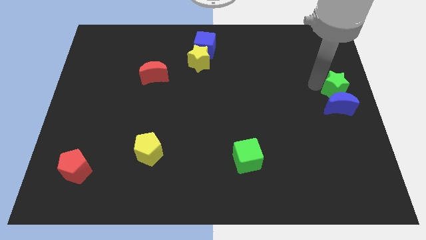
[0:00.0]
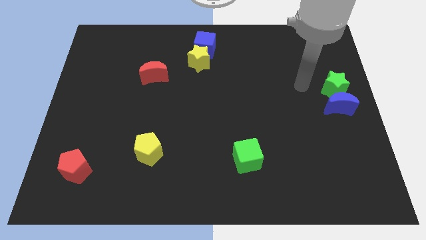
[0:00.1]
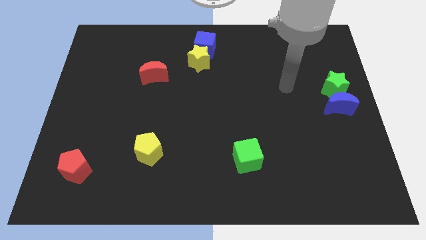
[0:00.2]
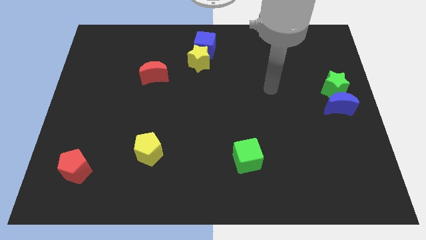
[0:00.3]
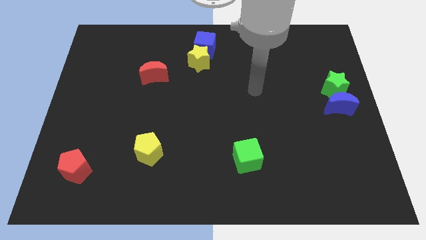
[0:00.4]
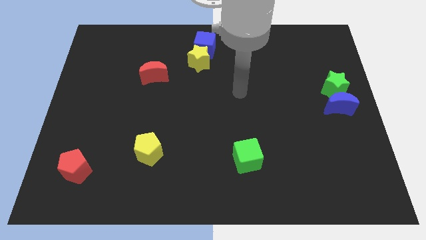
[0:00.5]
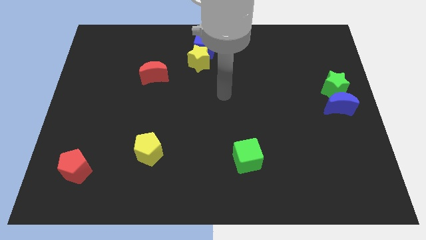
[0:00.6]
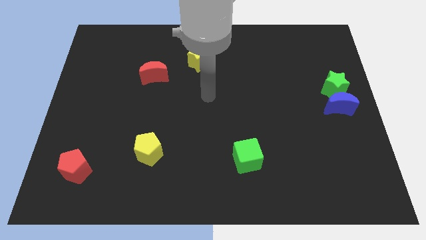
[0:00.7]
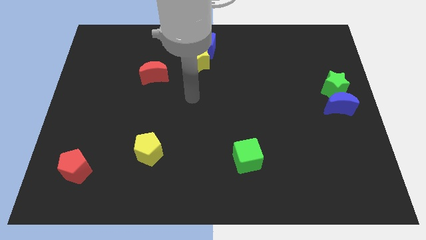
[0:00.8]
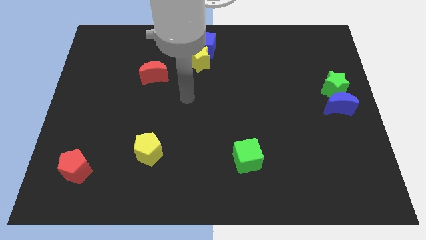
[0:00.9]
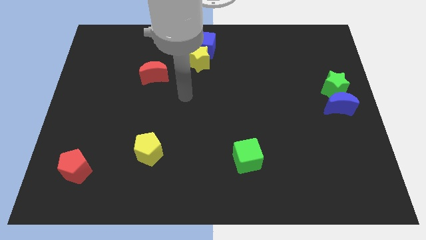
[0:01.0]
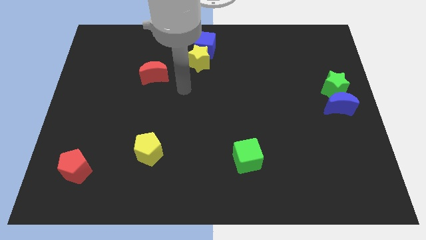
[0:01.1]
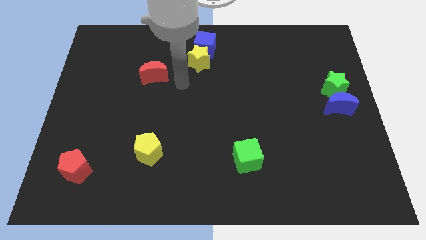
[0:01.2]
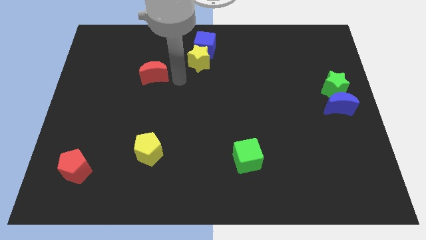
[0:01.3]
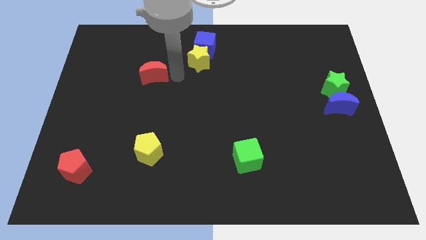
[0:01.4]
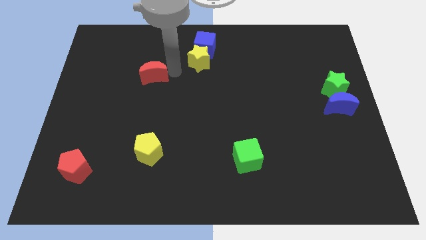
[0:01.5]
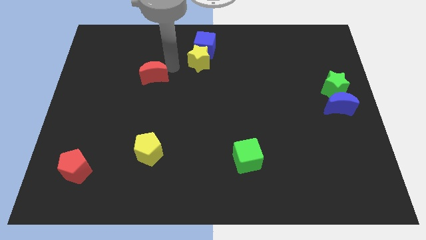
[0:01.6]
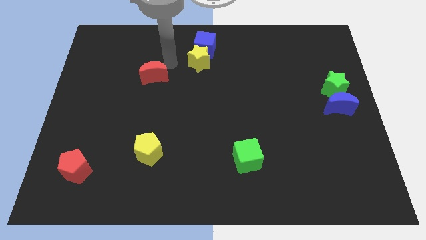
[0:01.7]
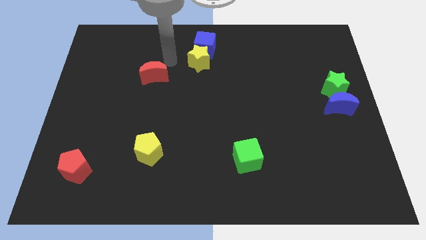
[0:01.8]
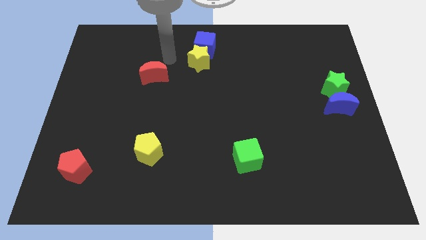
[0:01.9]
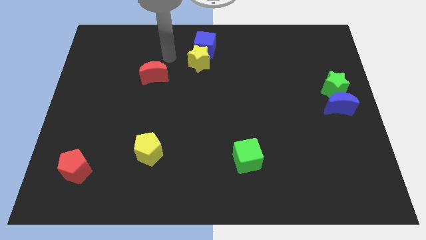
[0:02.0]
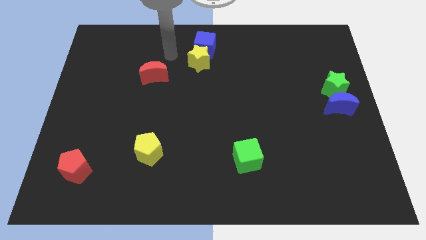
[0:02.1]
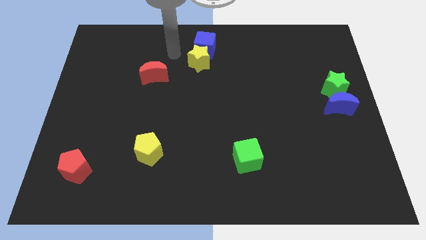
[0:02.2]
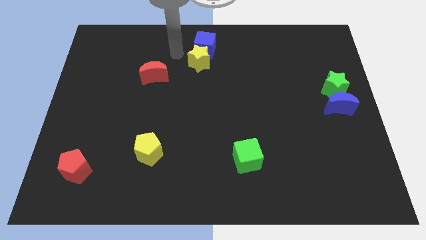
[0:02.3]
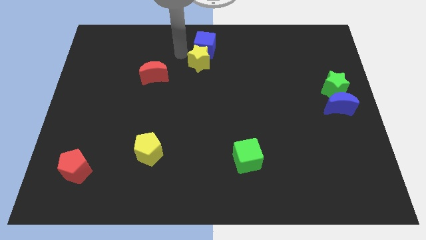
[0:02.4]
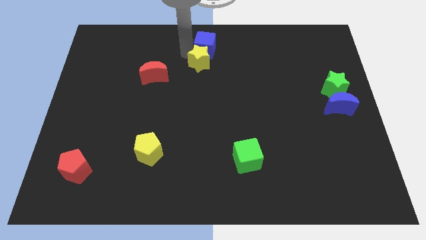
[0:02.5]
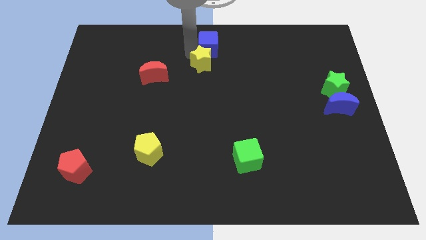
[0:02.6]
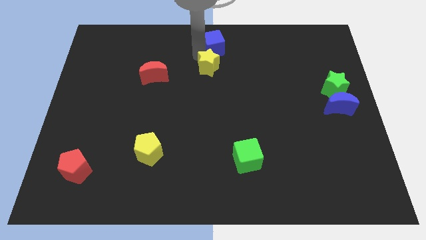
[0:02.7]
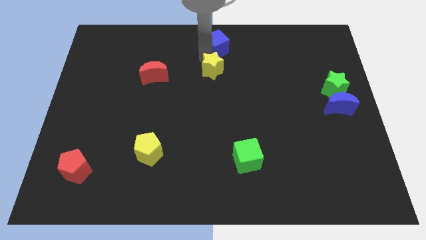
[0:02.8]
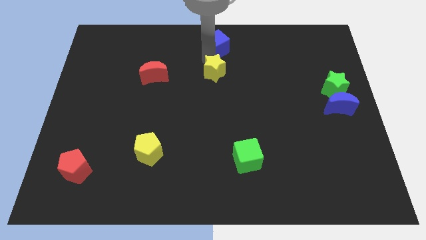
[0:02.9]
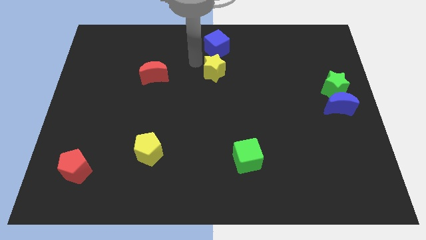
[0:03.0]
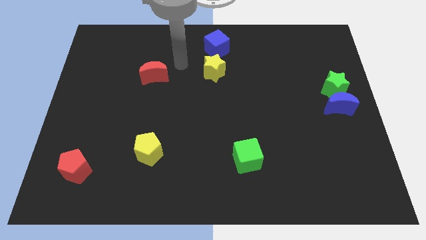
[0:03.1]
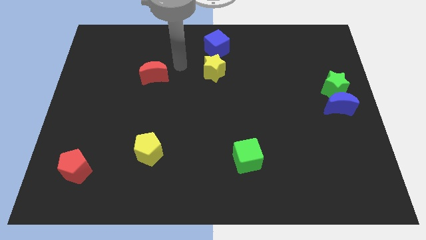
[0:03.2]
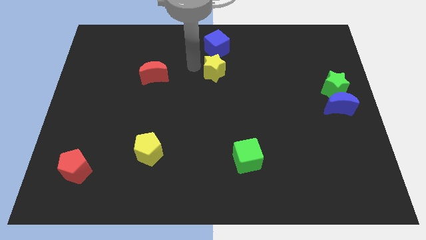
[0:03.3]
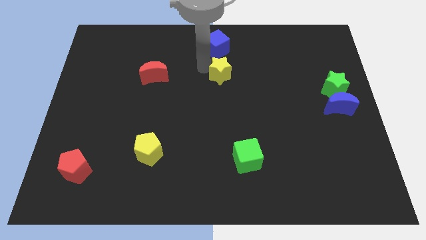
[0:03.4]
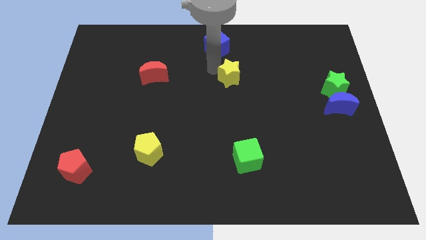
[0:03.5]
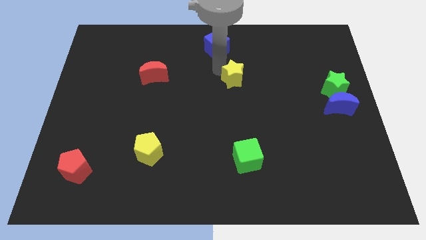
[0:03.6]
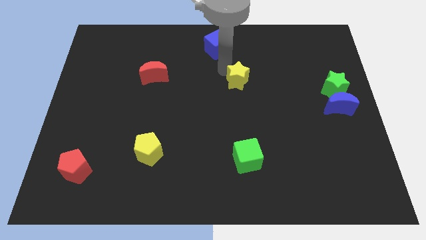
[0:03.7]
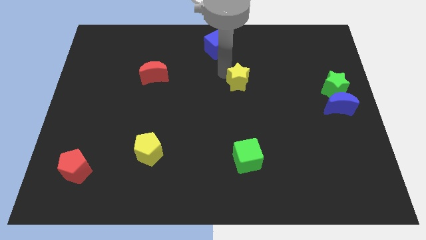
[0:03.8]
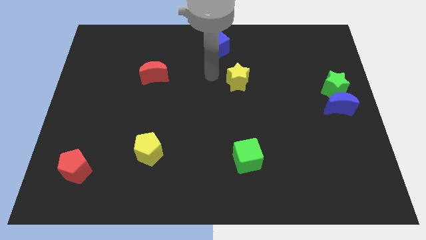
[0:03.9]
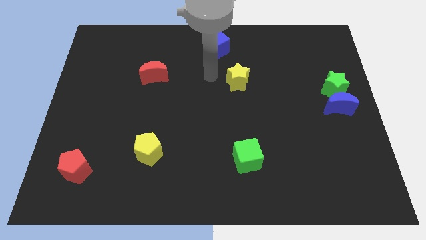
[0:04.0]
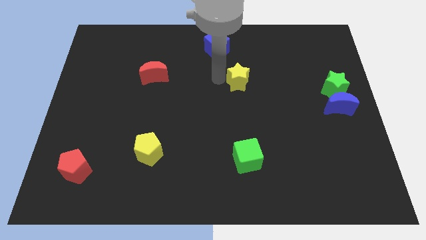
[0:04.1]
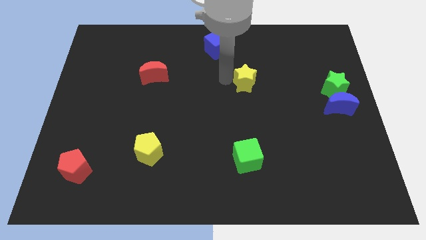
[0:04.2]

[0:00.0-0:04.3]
move the yellow star vertically above the green cube

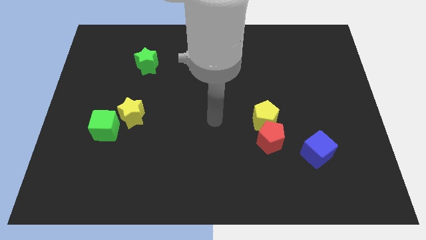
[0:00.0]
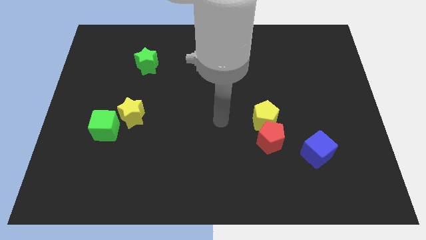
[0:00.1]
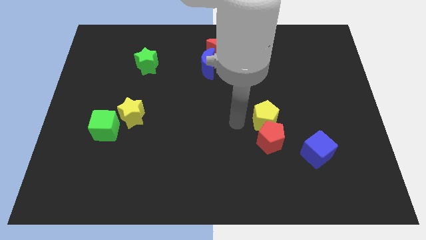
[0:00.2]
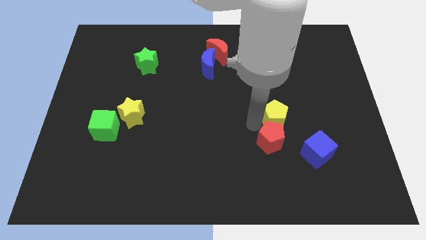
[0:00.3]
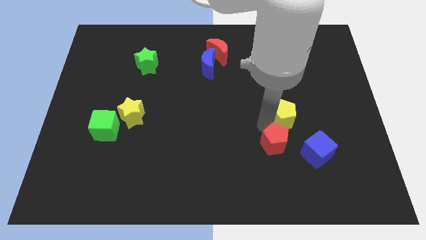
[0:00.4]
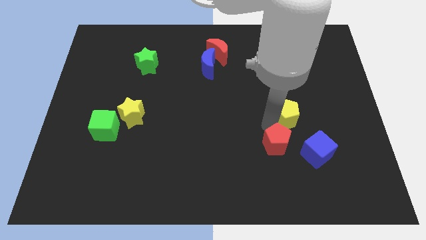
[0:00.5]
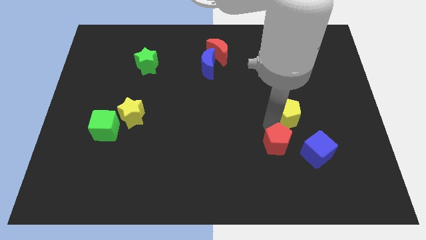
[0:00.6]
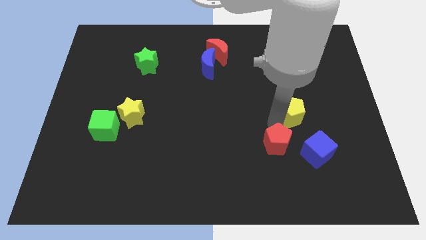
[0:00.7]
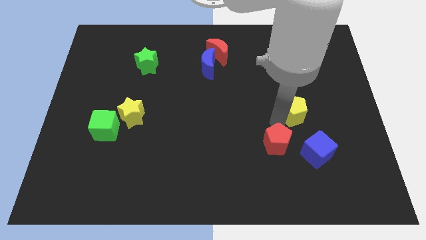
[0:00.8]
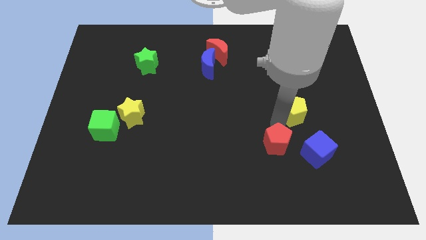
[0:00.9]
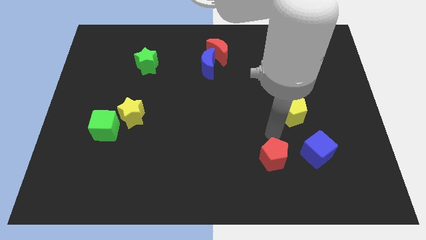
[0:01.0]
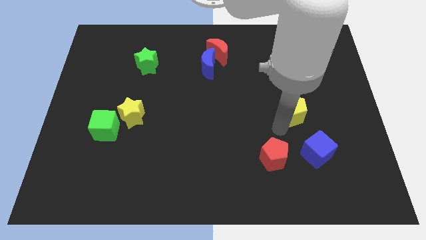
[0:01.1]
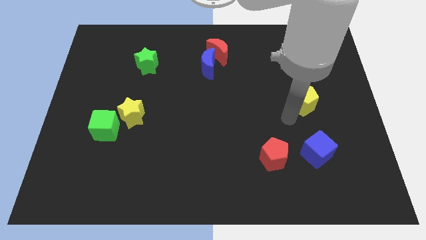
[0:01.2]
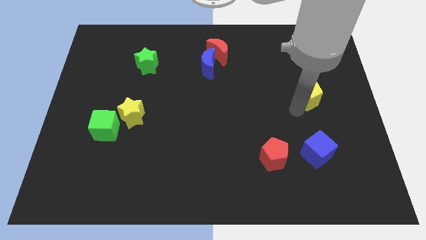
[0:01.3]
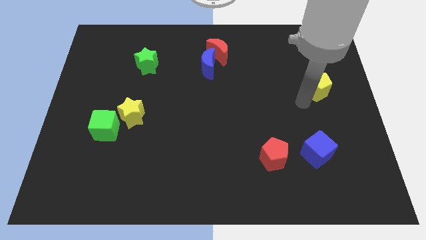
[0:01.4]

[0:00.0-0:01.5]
move the red pentagon to the left of the blue cube

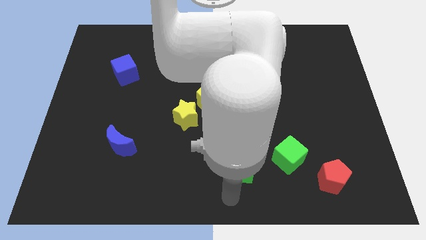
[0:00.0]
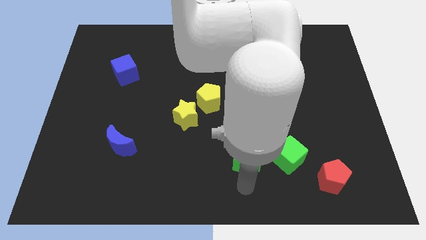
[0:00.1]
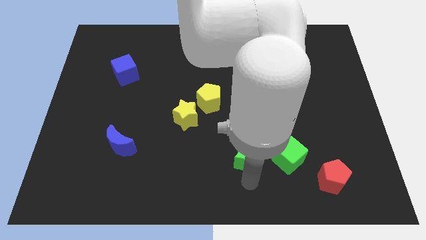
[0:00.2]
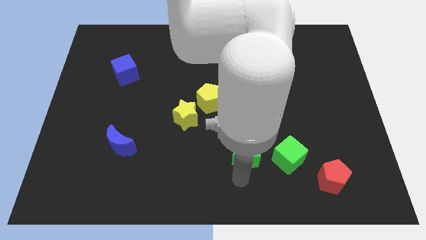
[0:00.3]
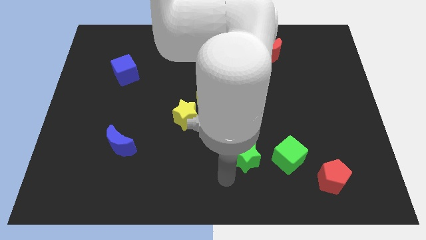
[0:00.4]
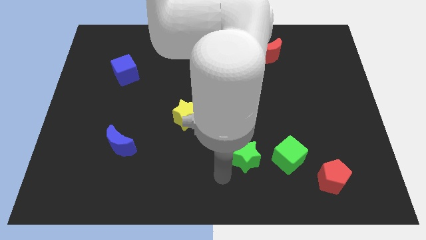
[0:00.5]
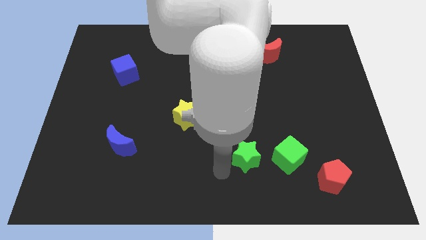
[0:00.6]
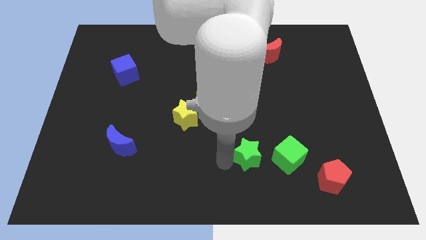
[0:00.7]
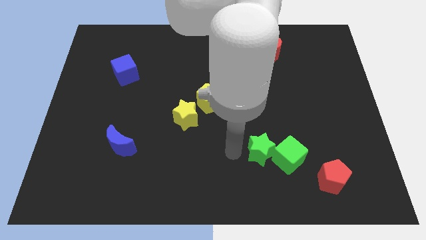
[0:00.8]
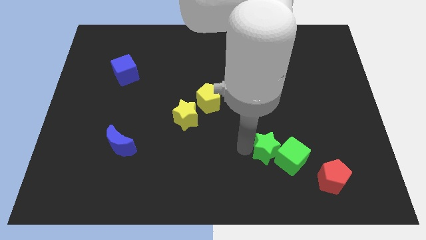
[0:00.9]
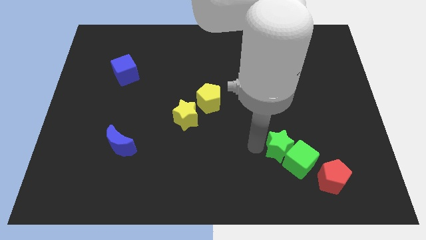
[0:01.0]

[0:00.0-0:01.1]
move the green star into the green cube

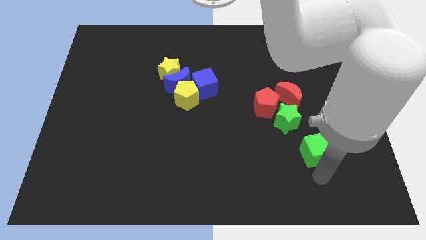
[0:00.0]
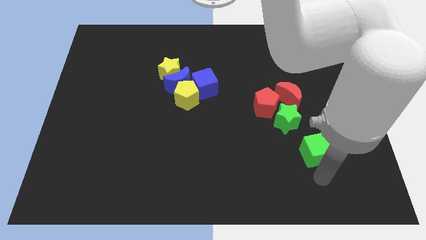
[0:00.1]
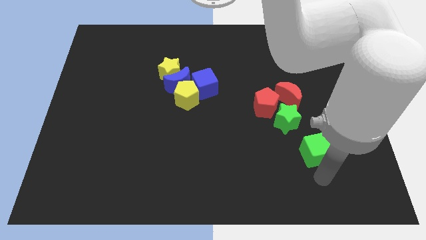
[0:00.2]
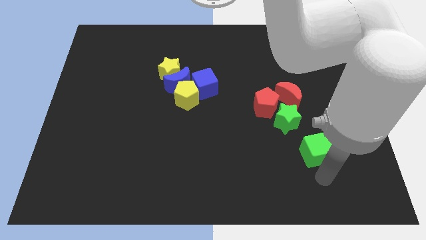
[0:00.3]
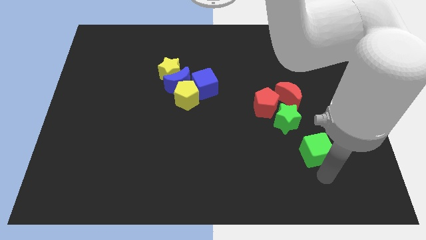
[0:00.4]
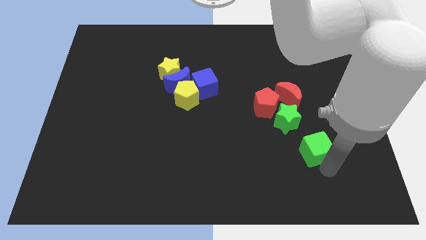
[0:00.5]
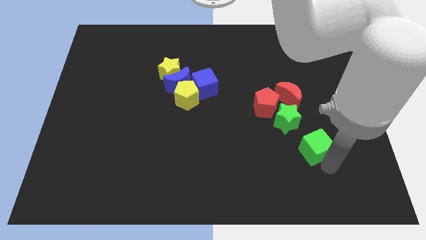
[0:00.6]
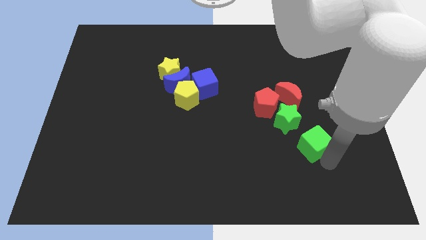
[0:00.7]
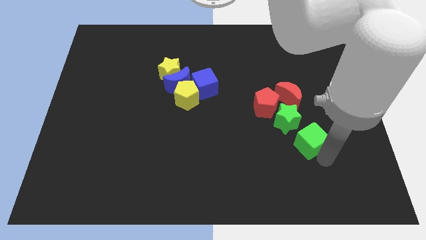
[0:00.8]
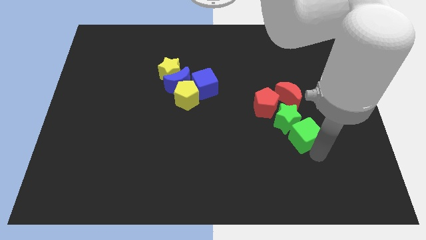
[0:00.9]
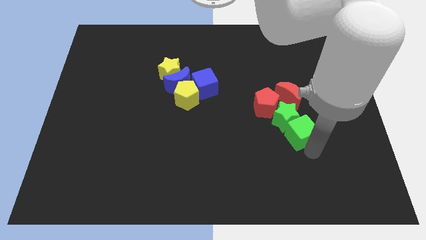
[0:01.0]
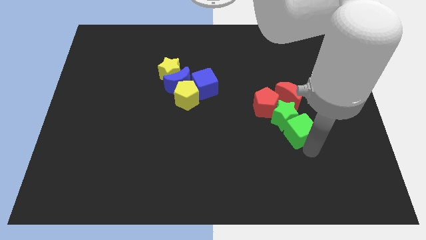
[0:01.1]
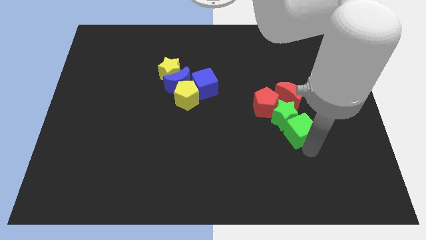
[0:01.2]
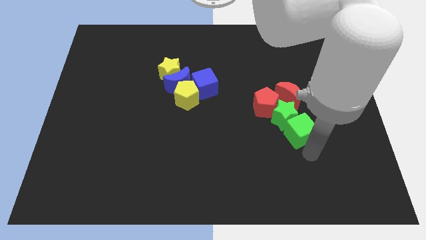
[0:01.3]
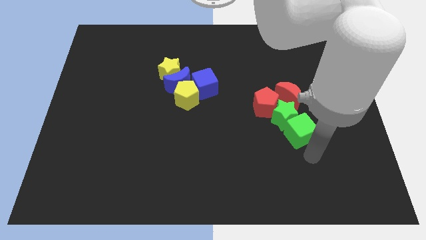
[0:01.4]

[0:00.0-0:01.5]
push green cube into green star

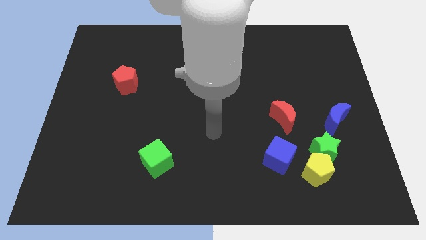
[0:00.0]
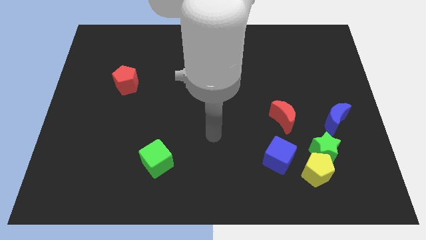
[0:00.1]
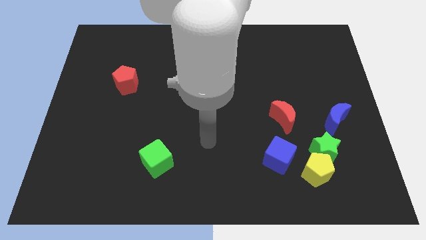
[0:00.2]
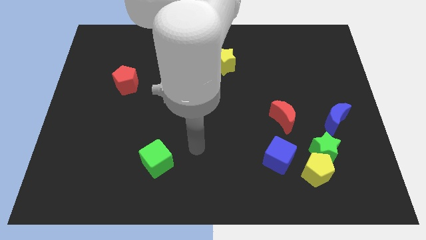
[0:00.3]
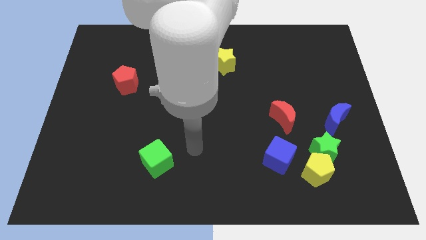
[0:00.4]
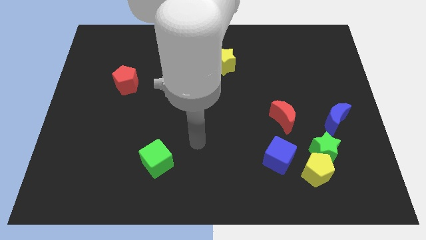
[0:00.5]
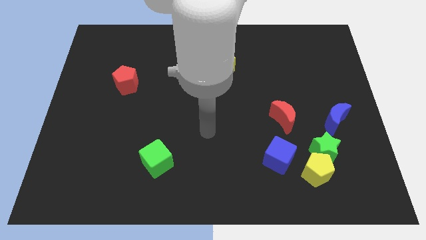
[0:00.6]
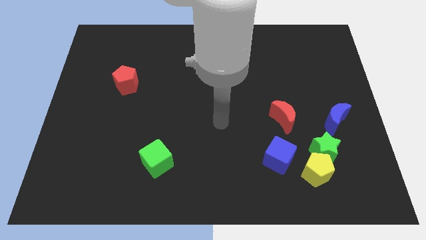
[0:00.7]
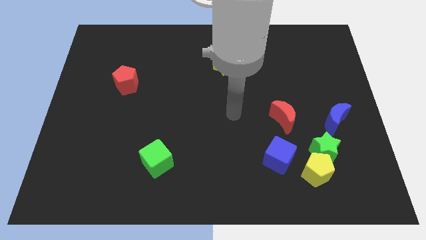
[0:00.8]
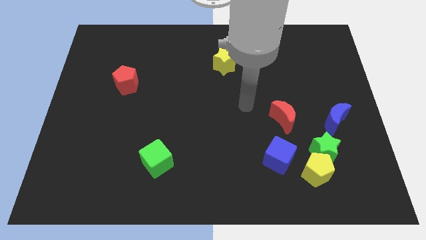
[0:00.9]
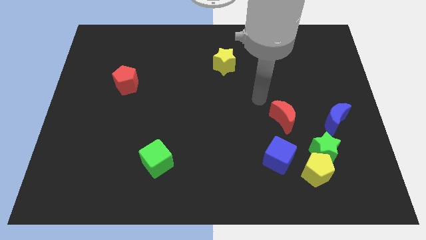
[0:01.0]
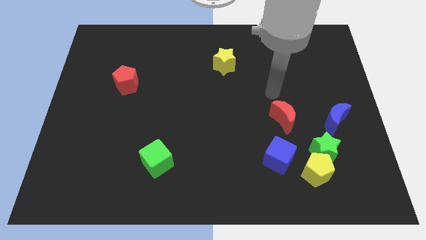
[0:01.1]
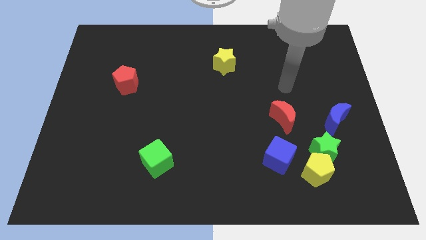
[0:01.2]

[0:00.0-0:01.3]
point your arm at the top of the red crescent
